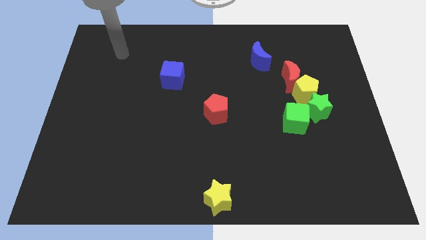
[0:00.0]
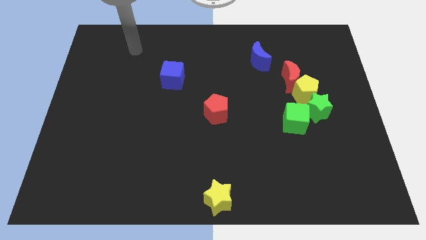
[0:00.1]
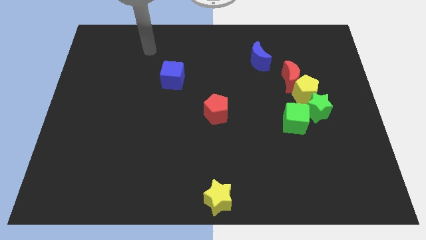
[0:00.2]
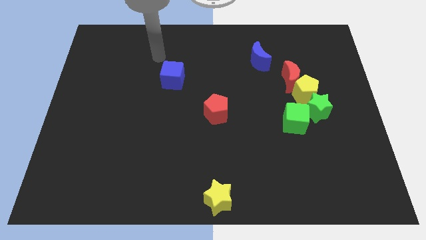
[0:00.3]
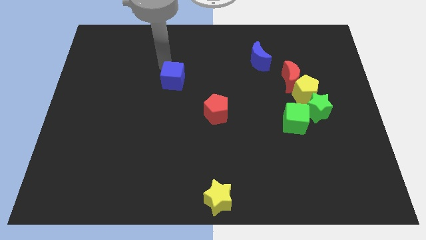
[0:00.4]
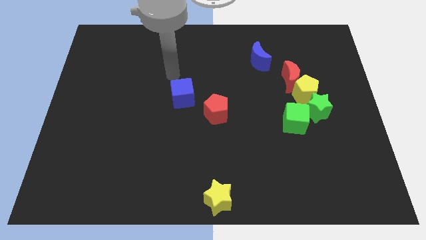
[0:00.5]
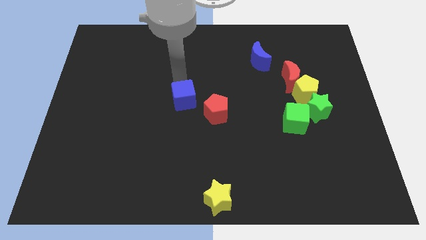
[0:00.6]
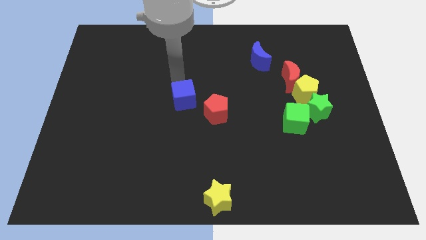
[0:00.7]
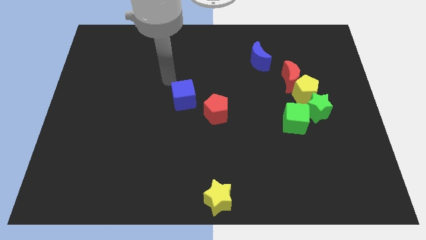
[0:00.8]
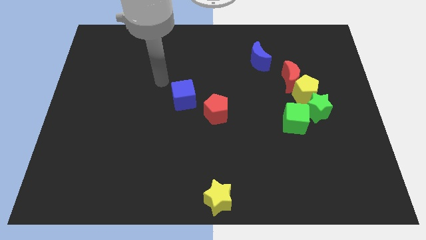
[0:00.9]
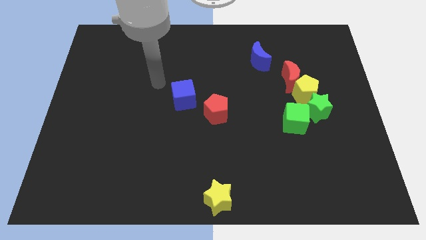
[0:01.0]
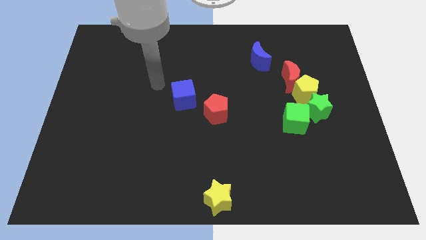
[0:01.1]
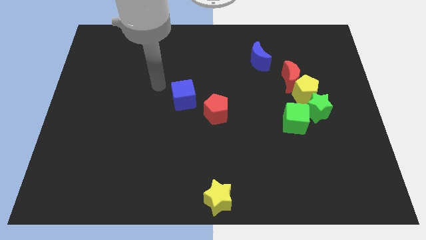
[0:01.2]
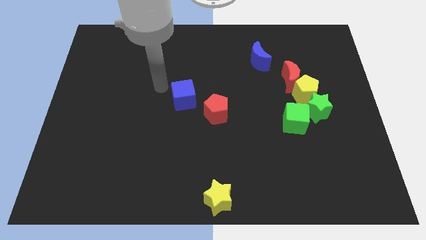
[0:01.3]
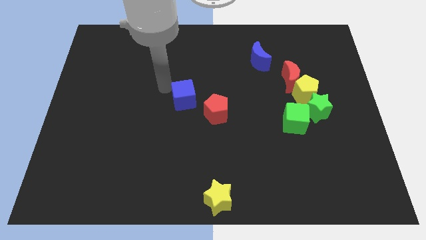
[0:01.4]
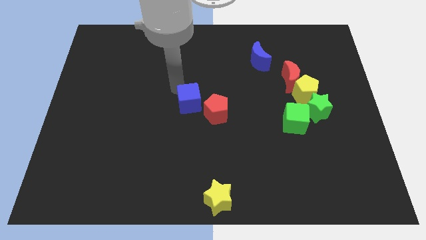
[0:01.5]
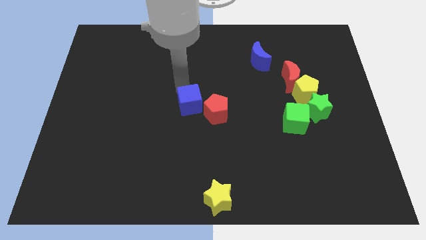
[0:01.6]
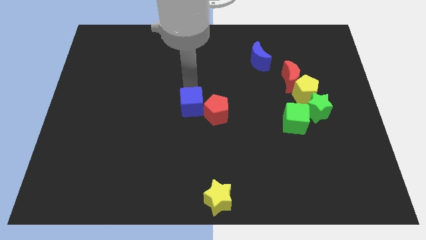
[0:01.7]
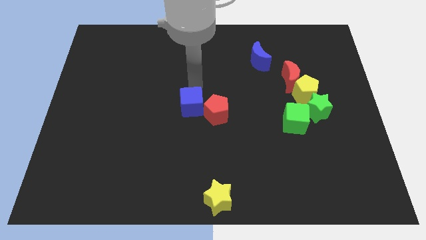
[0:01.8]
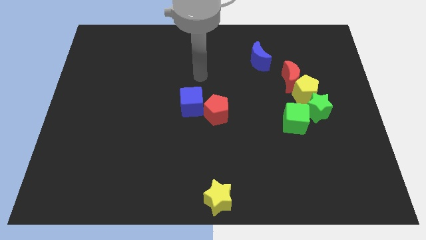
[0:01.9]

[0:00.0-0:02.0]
slide the blue cube to the bottom side

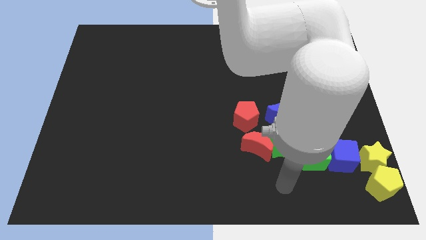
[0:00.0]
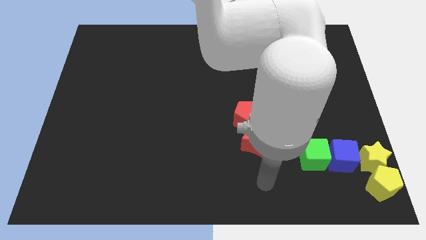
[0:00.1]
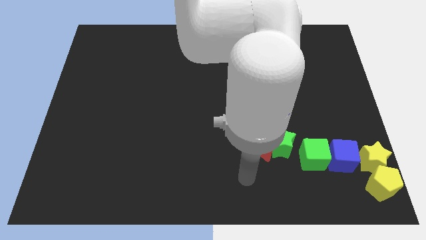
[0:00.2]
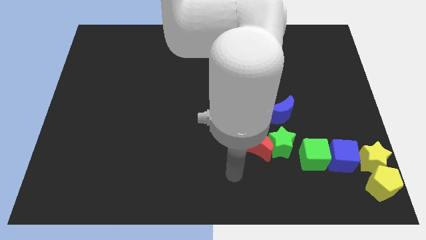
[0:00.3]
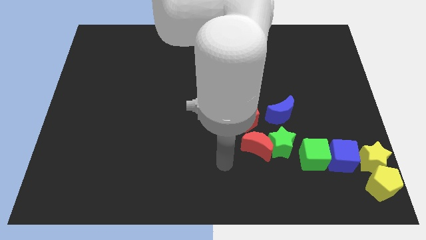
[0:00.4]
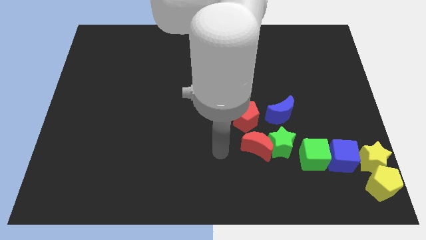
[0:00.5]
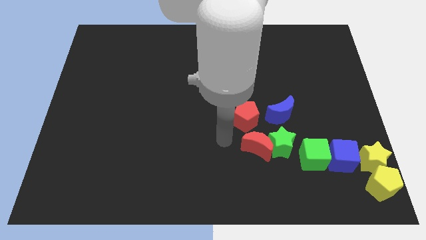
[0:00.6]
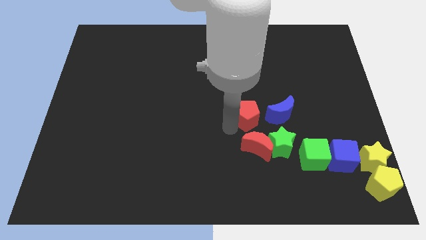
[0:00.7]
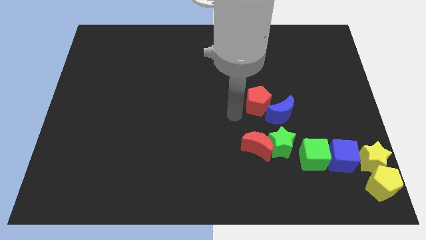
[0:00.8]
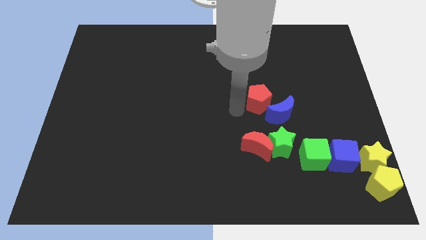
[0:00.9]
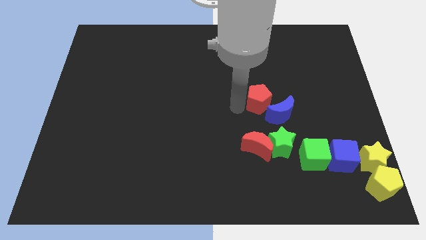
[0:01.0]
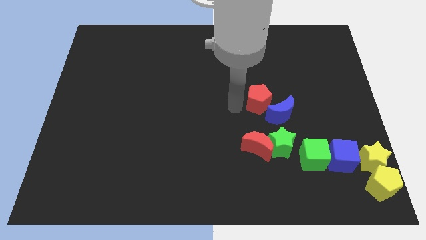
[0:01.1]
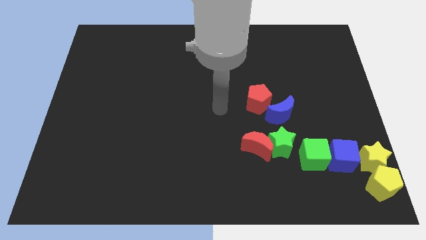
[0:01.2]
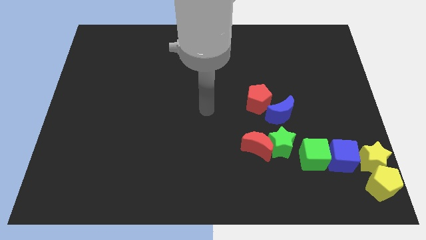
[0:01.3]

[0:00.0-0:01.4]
place the red pentagon above the blue moon

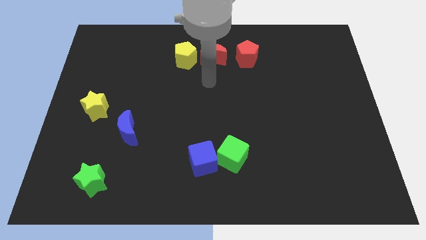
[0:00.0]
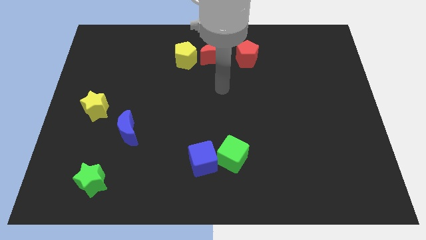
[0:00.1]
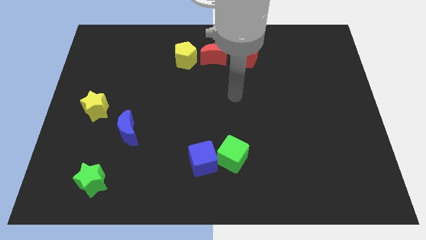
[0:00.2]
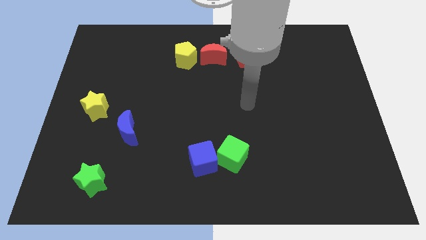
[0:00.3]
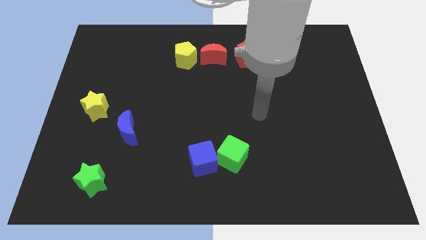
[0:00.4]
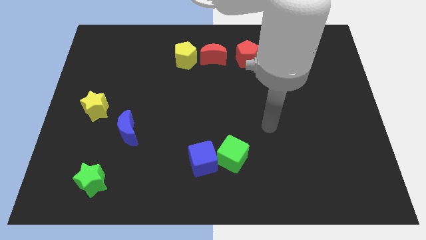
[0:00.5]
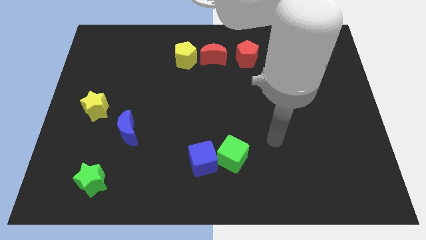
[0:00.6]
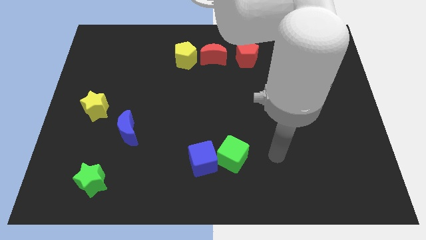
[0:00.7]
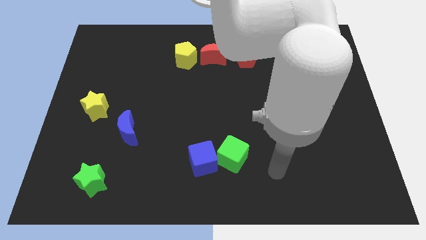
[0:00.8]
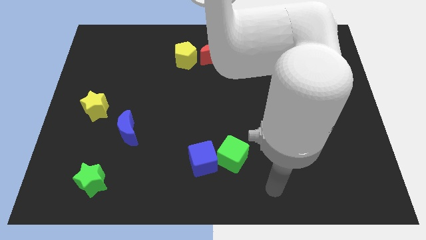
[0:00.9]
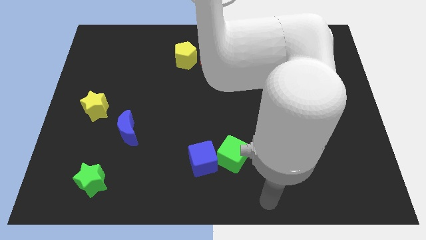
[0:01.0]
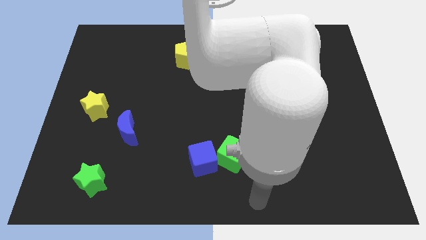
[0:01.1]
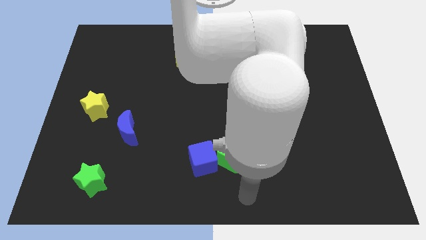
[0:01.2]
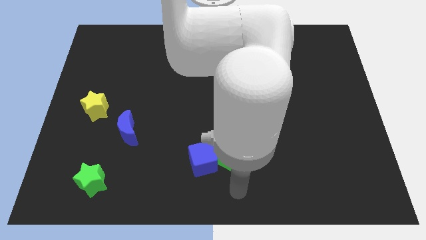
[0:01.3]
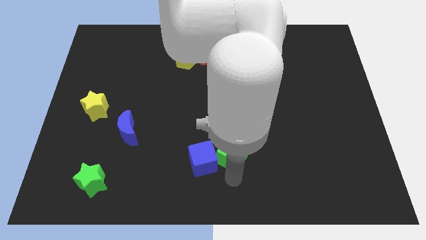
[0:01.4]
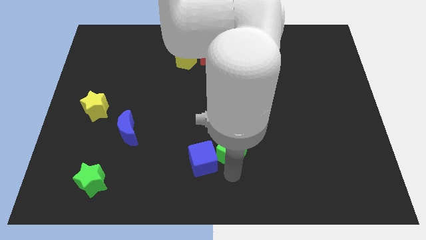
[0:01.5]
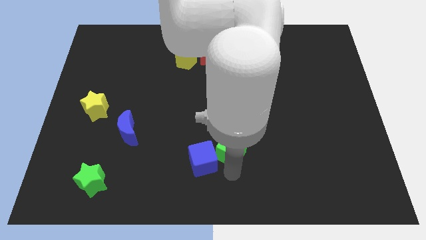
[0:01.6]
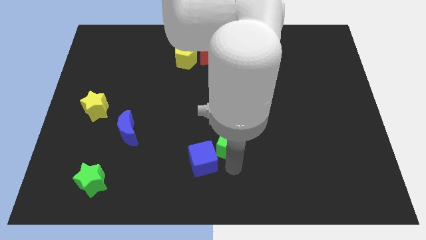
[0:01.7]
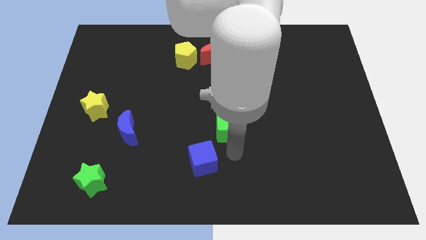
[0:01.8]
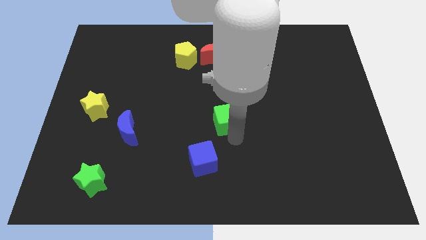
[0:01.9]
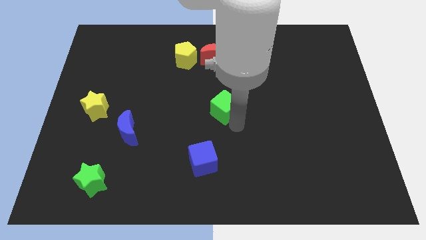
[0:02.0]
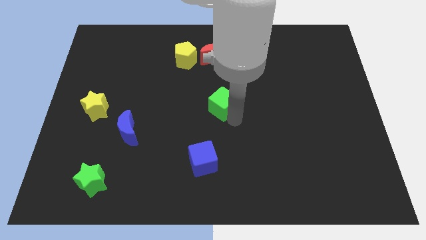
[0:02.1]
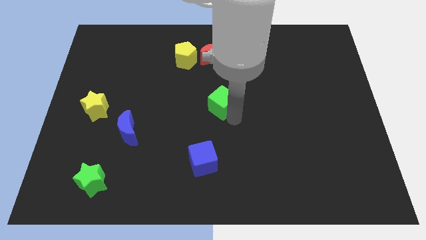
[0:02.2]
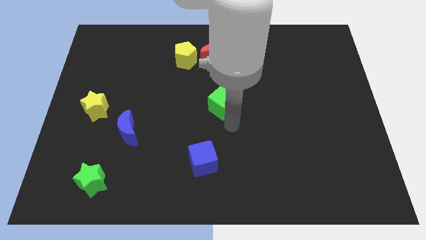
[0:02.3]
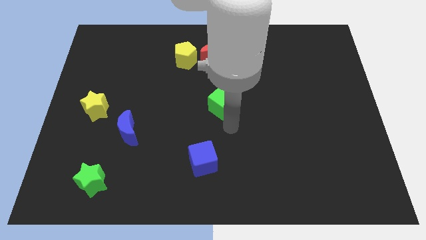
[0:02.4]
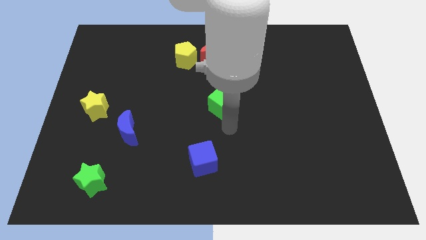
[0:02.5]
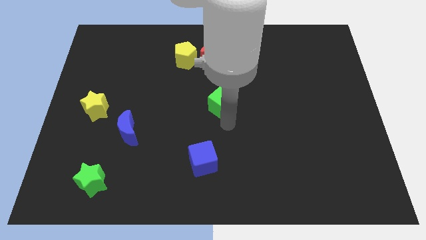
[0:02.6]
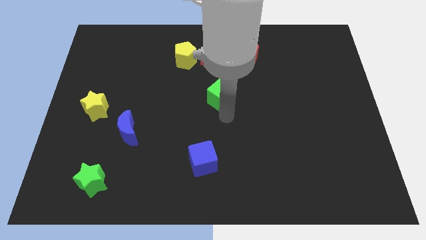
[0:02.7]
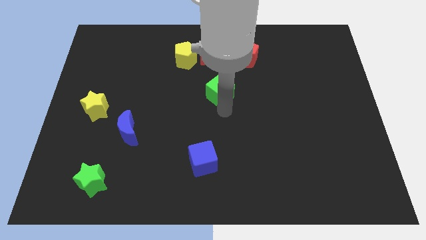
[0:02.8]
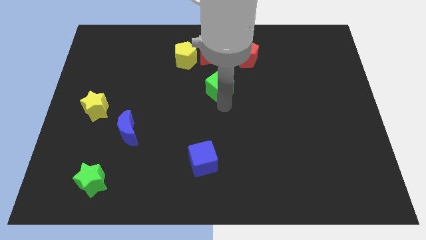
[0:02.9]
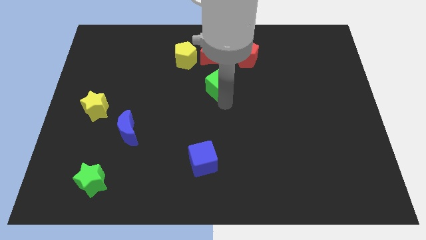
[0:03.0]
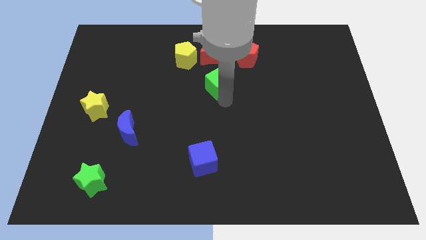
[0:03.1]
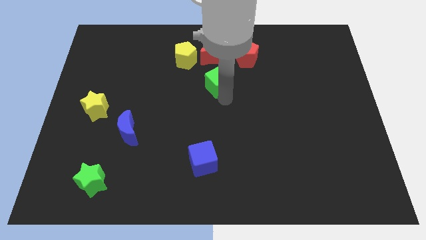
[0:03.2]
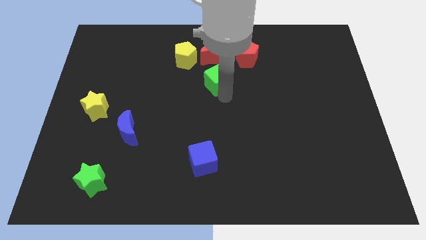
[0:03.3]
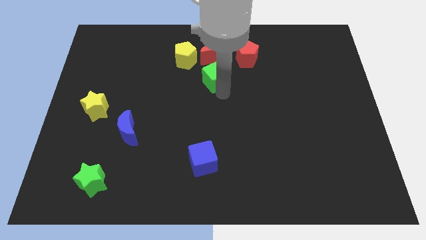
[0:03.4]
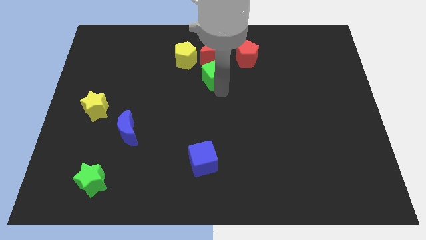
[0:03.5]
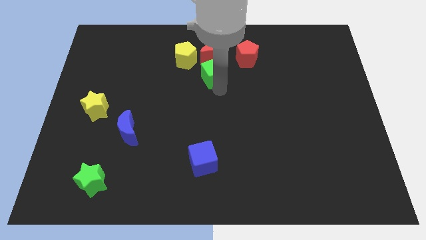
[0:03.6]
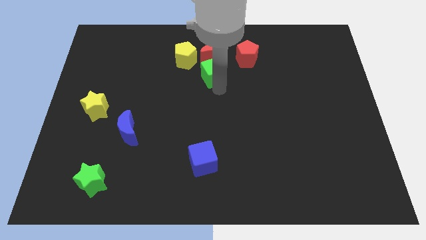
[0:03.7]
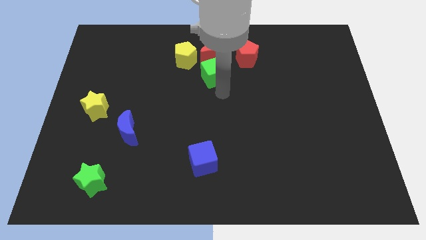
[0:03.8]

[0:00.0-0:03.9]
push the green cube to the bottom of red crescent

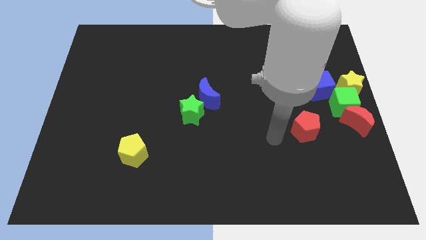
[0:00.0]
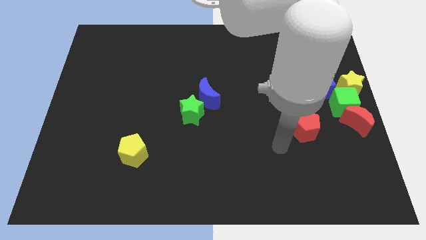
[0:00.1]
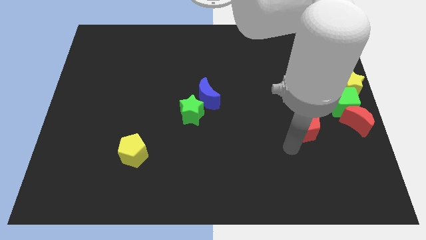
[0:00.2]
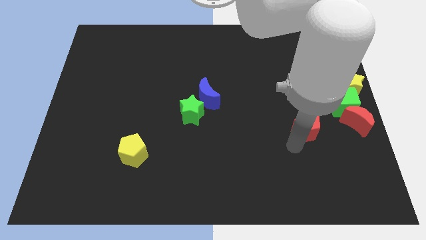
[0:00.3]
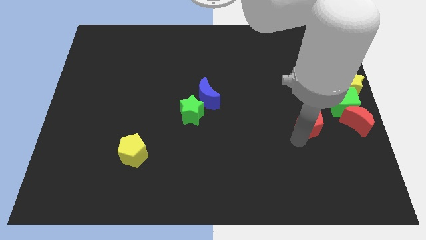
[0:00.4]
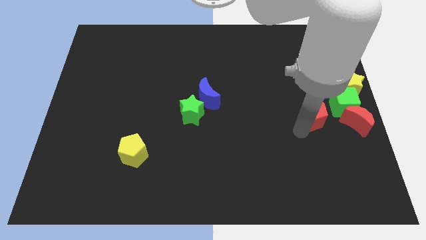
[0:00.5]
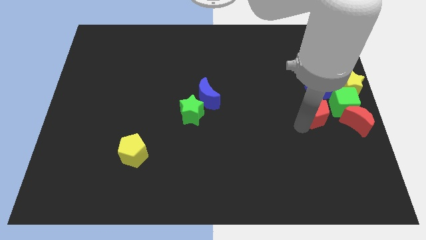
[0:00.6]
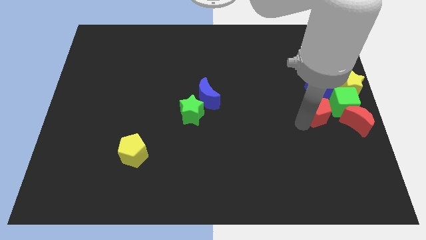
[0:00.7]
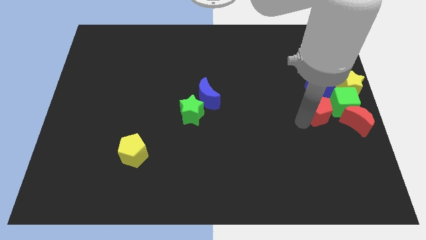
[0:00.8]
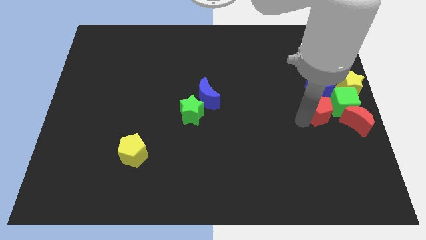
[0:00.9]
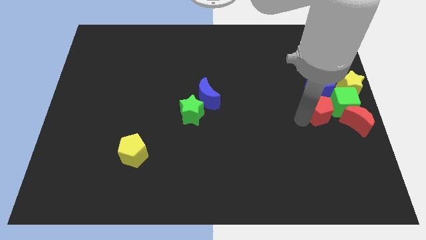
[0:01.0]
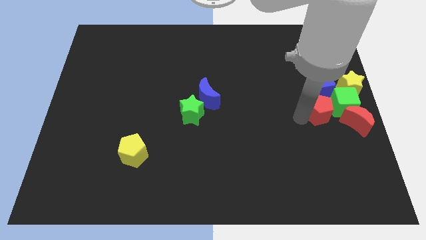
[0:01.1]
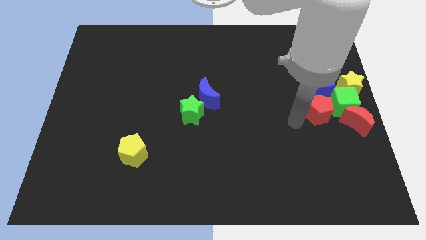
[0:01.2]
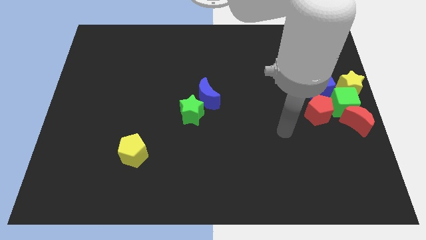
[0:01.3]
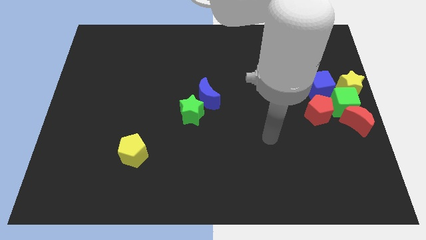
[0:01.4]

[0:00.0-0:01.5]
place the red pentagon left to the green cube

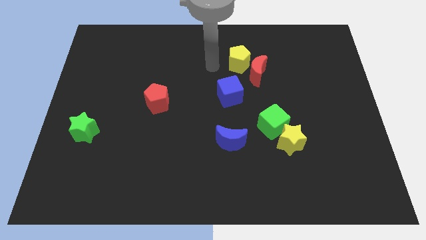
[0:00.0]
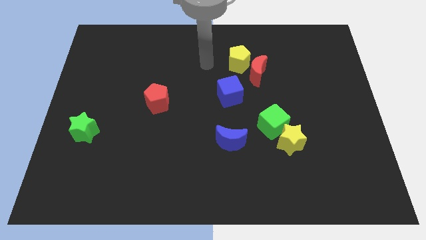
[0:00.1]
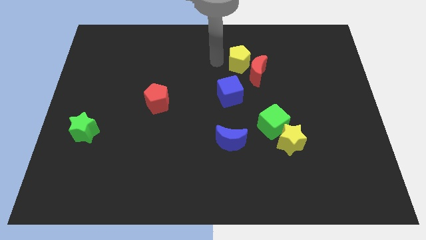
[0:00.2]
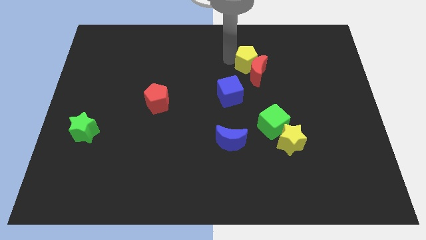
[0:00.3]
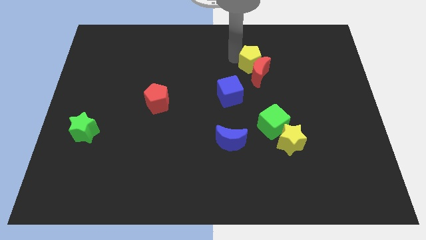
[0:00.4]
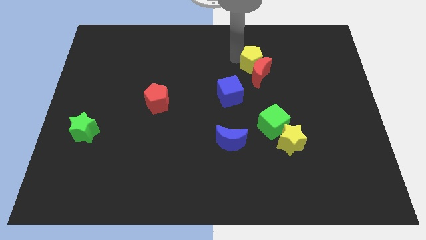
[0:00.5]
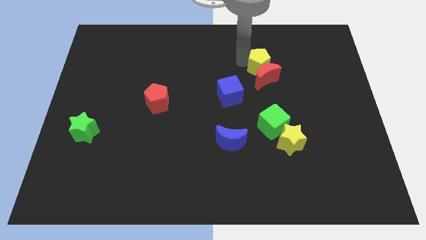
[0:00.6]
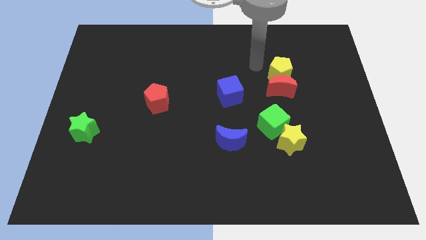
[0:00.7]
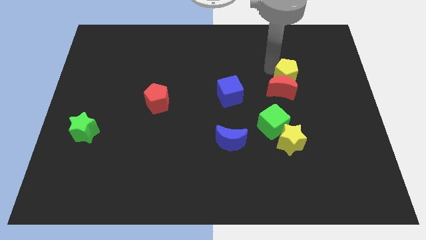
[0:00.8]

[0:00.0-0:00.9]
push the red crescent with the yellow pentagon
